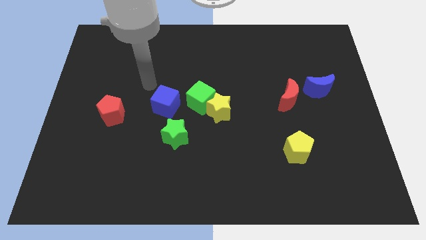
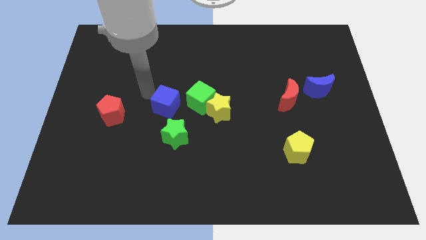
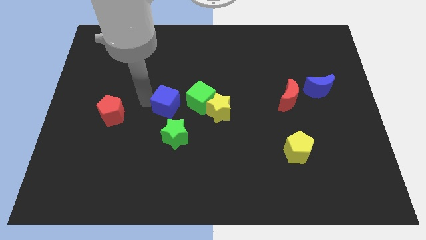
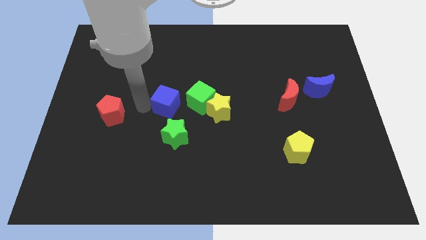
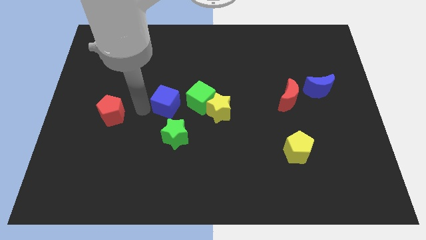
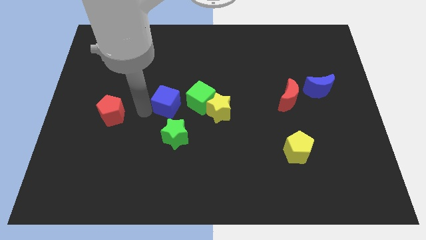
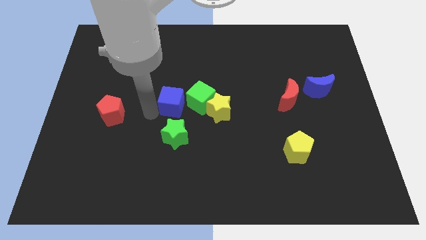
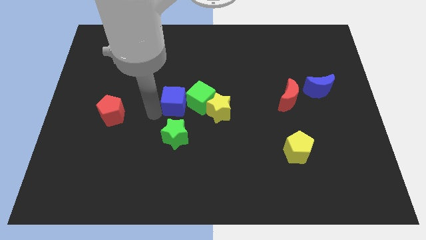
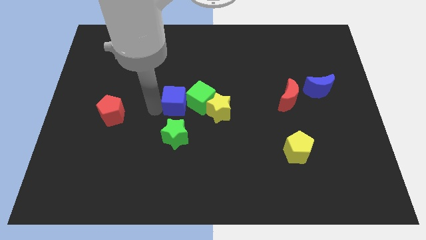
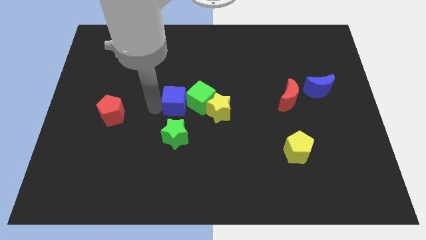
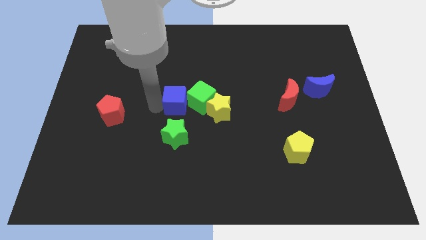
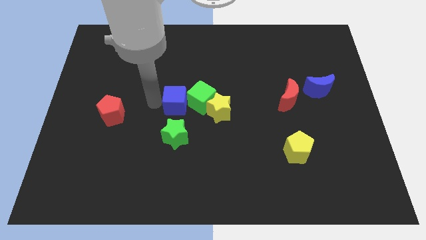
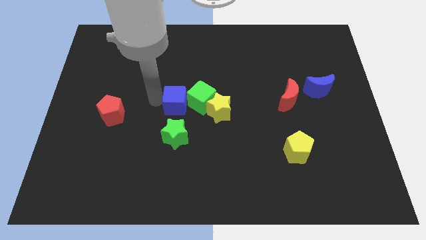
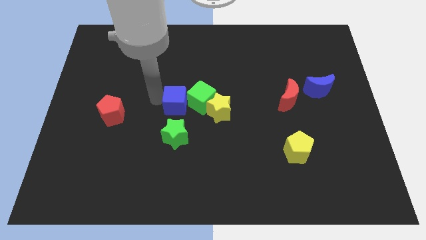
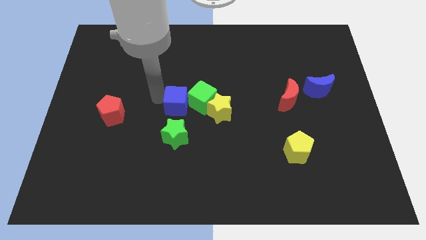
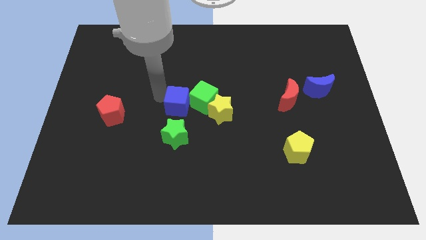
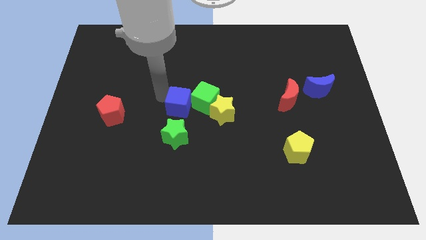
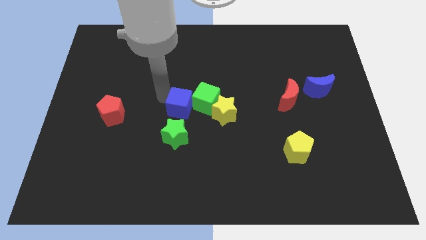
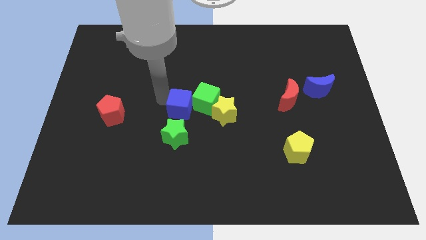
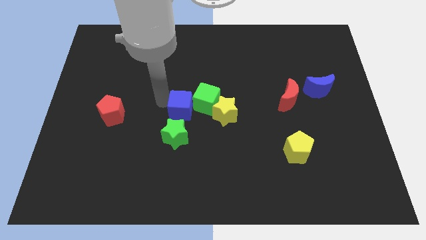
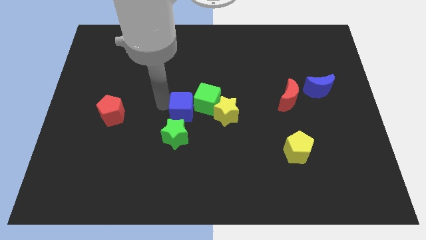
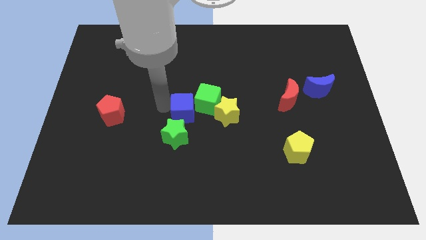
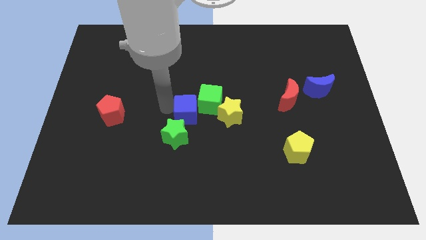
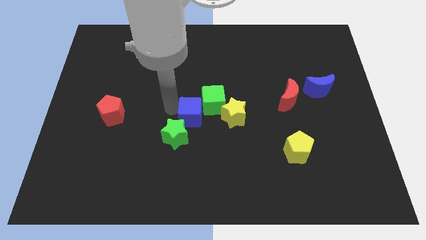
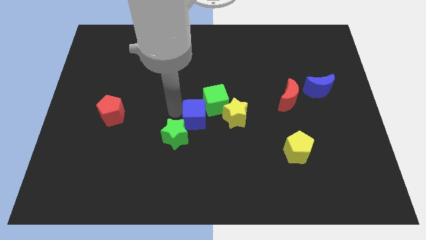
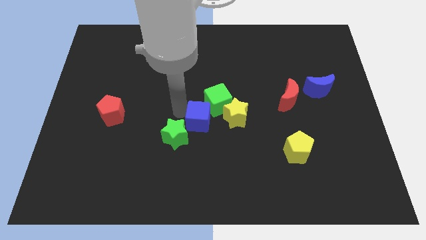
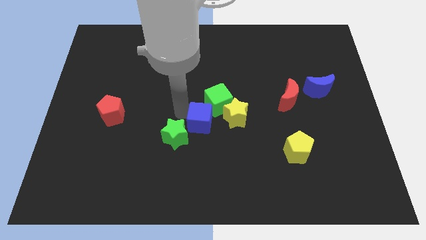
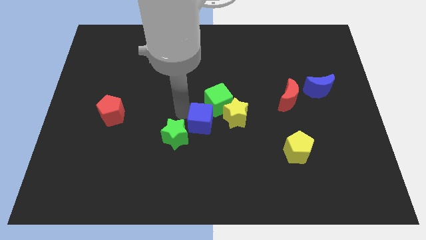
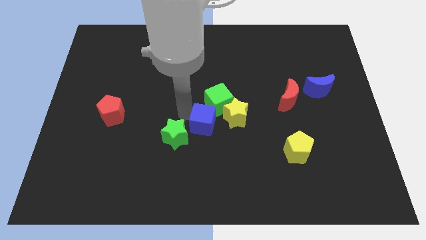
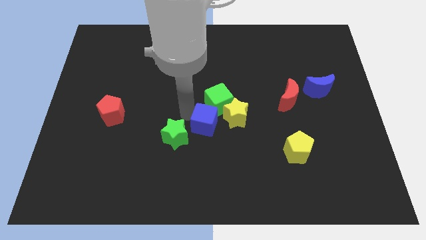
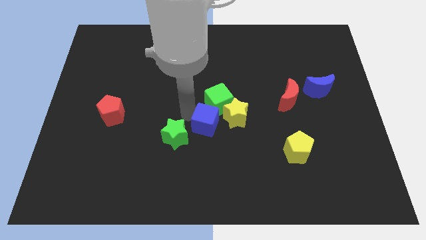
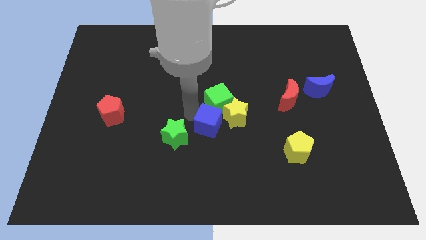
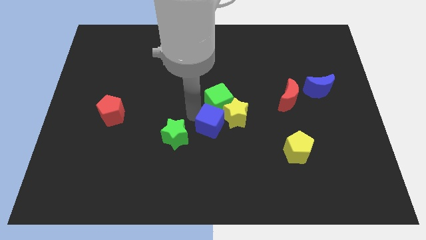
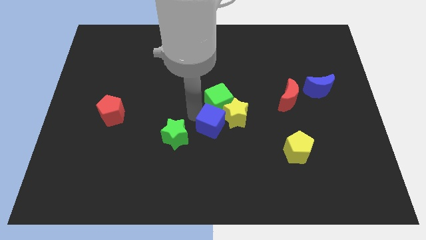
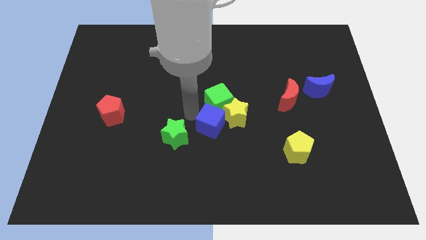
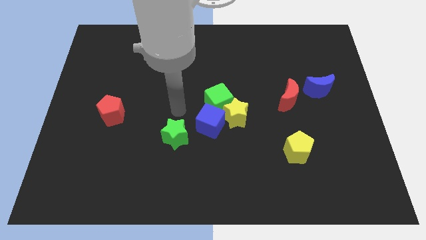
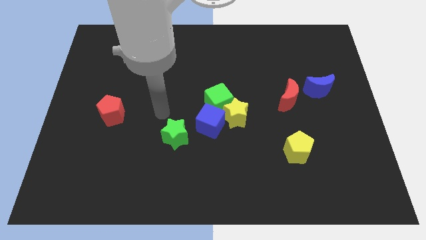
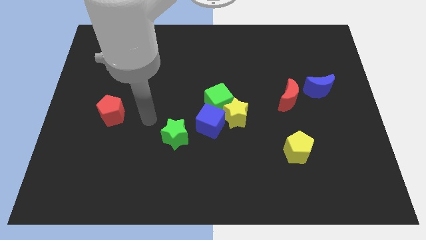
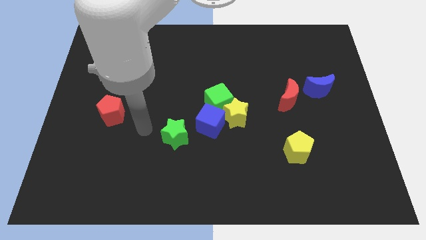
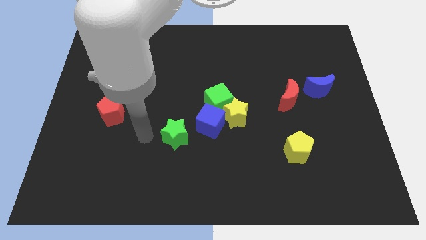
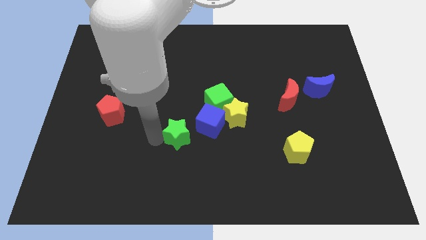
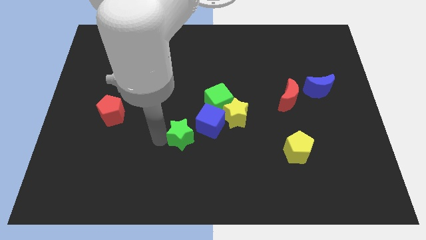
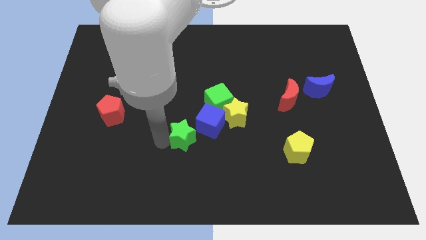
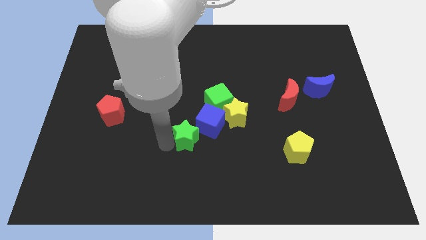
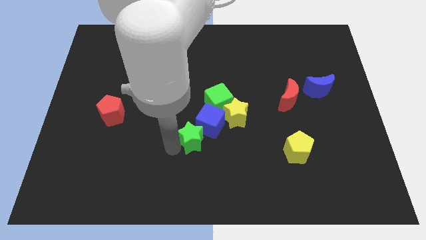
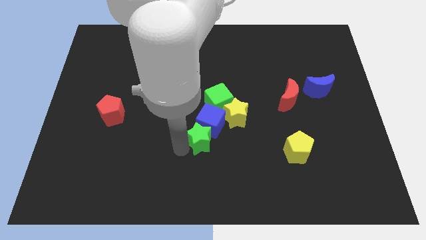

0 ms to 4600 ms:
adjust green blocks to form a group

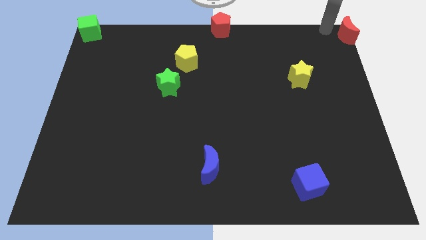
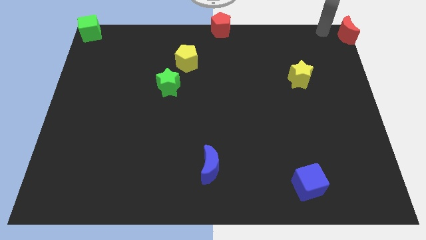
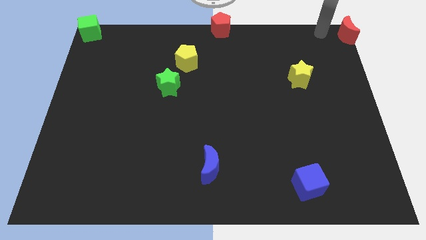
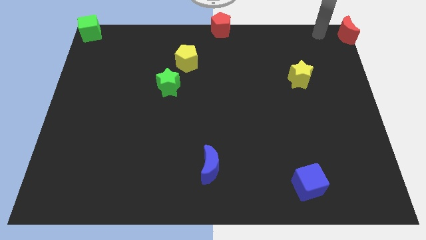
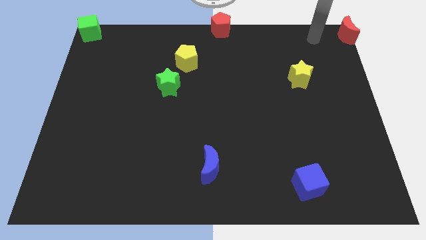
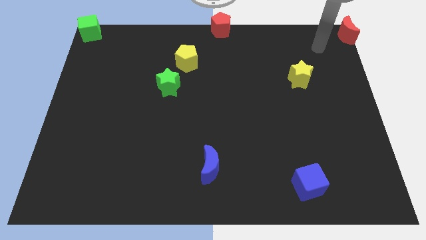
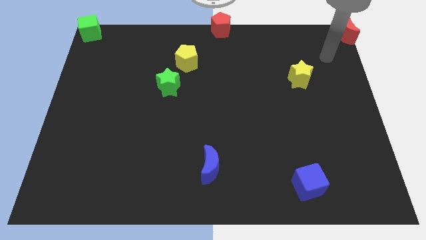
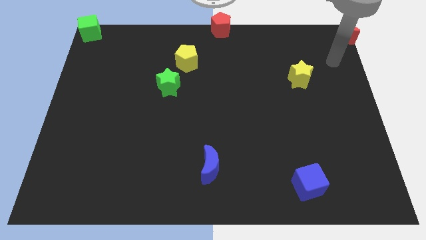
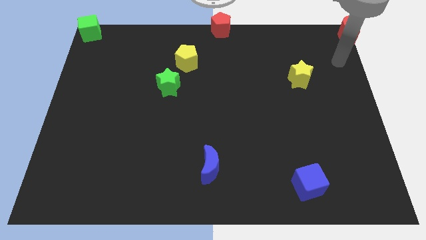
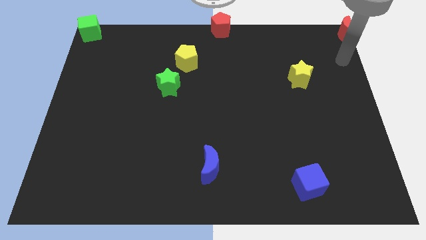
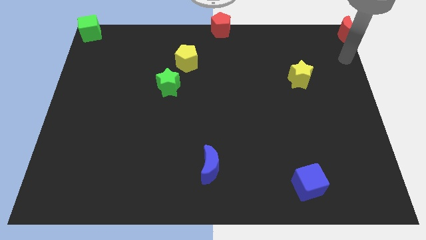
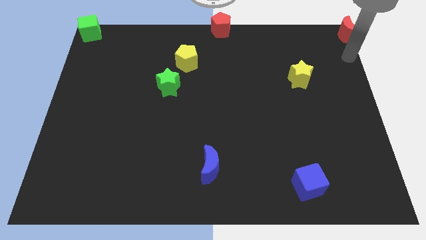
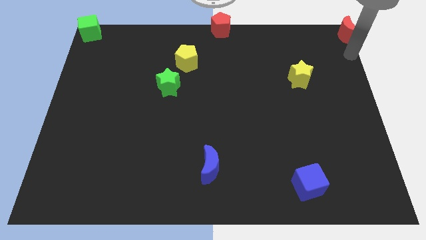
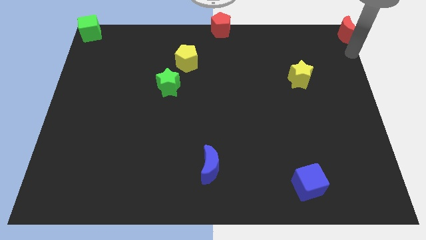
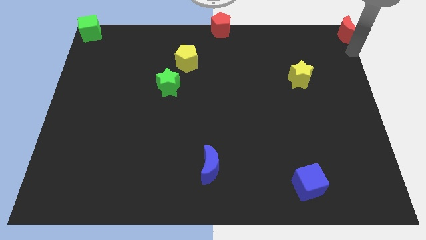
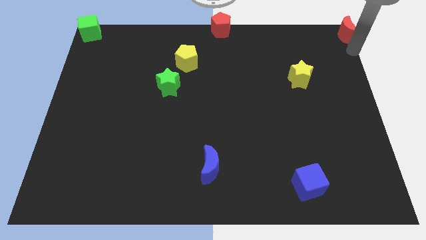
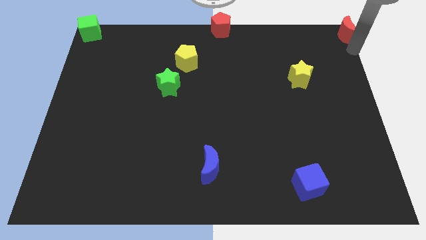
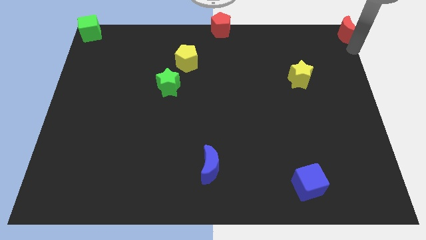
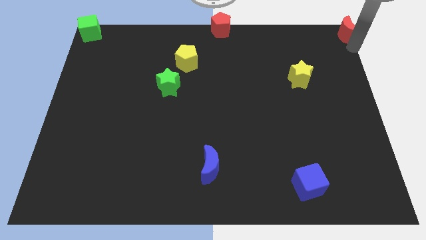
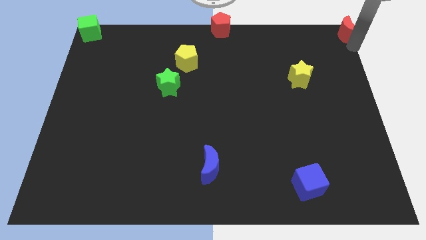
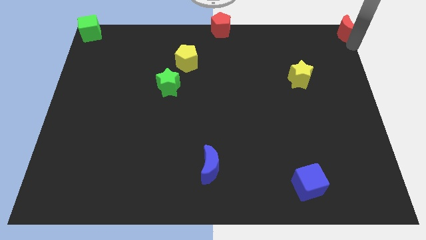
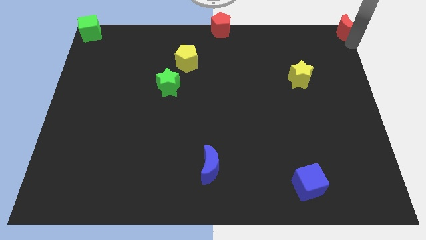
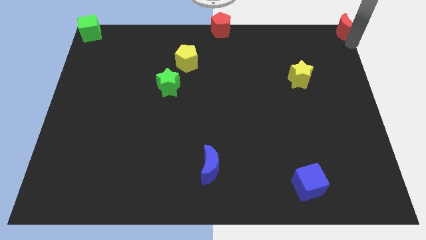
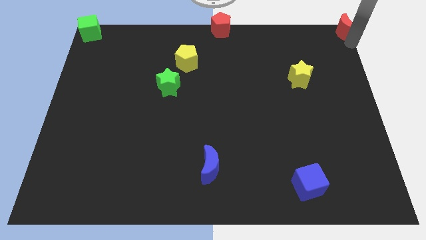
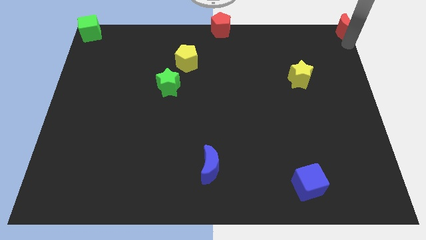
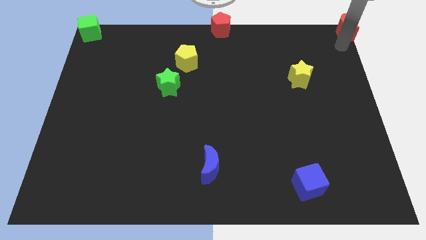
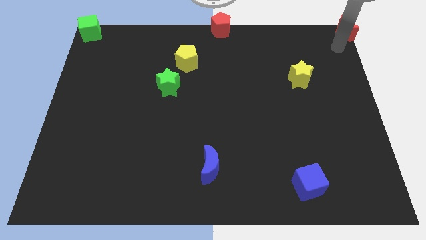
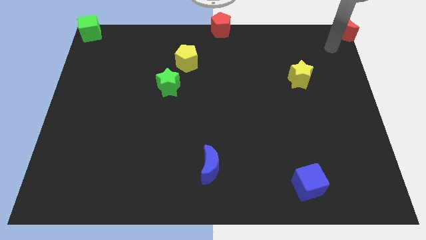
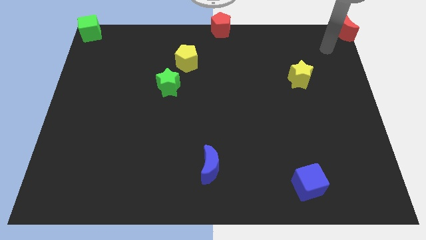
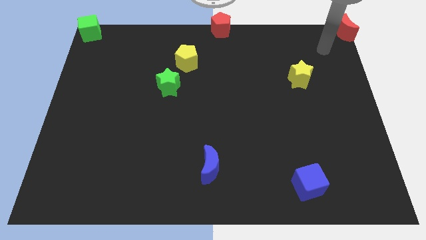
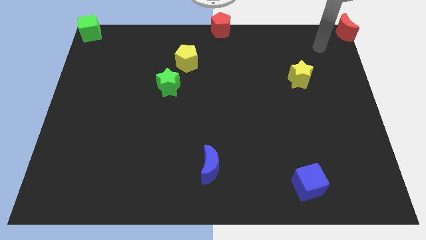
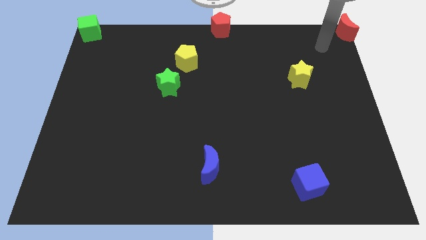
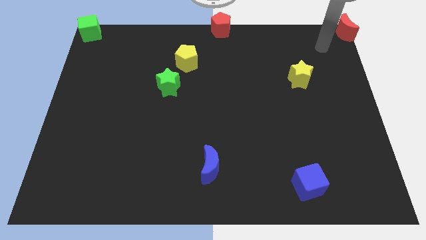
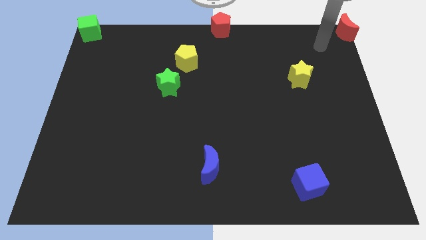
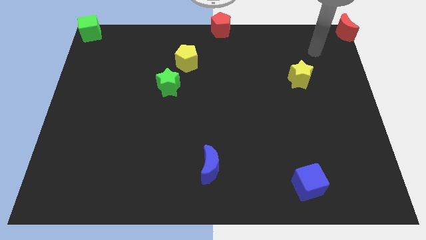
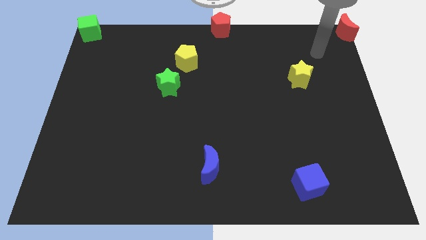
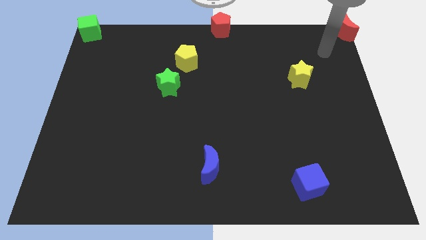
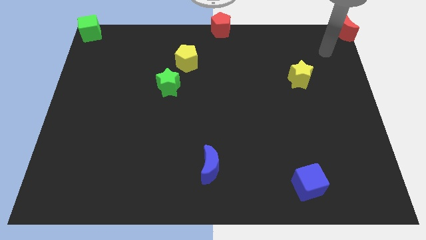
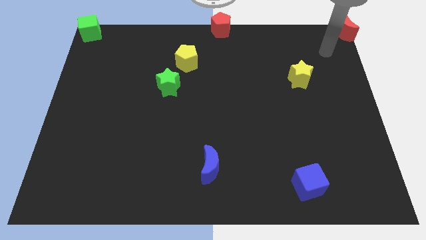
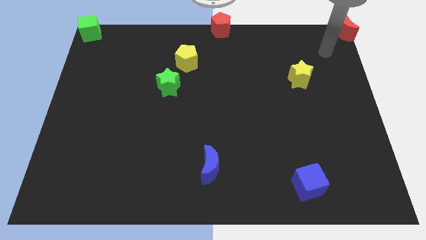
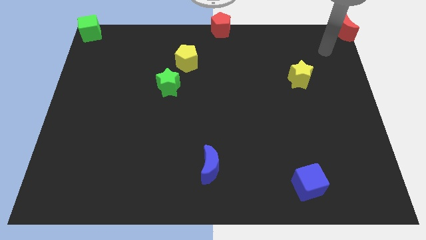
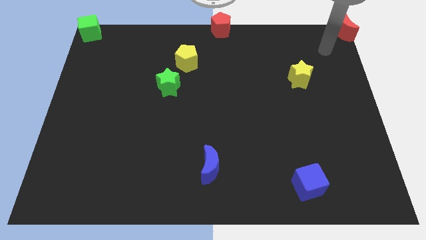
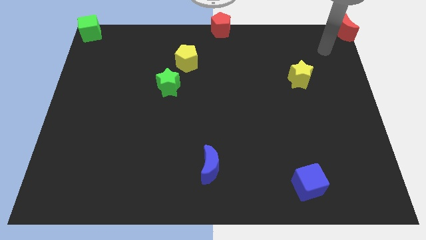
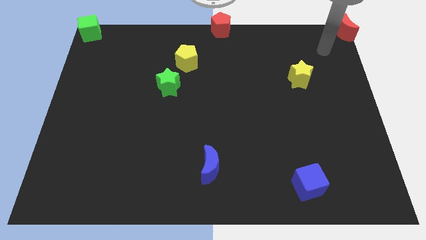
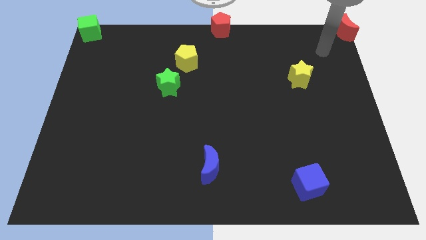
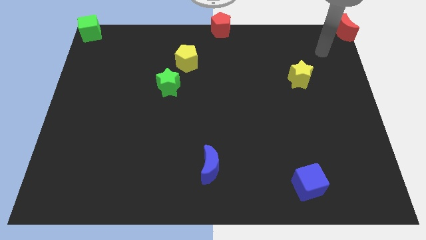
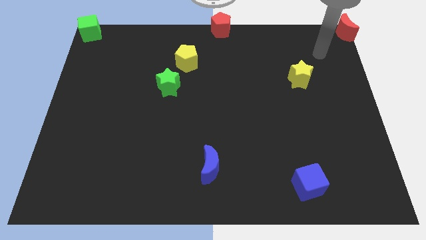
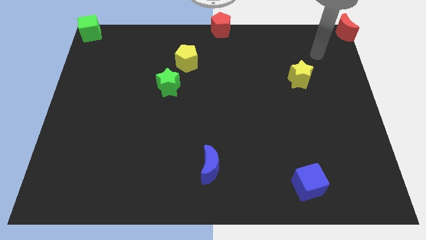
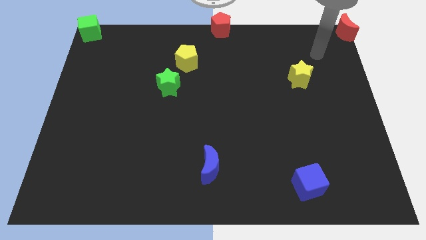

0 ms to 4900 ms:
slide the red moon to the top right side
